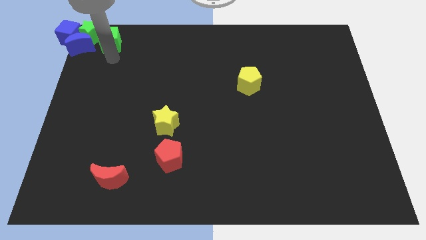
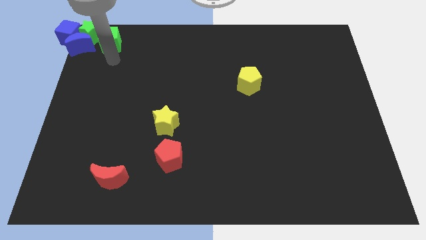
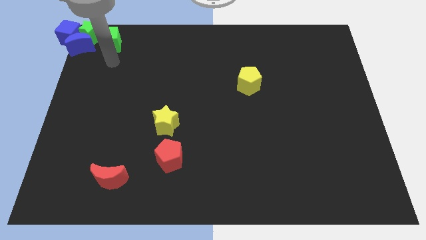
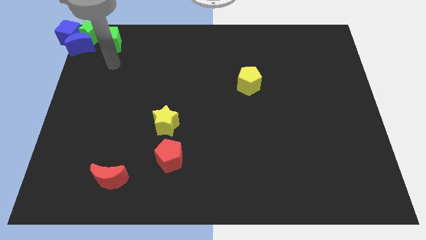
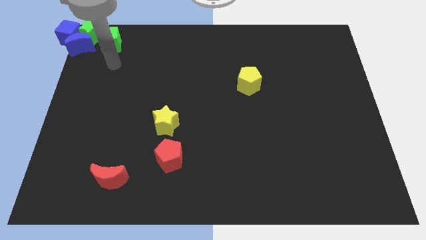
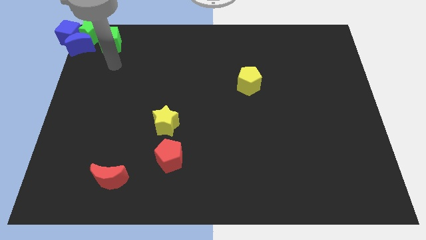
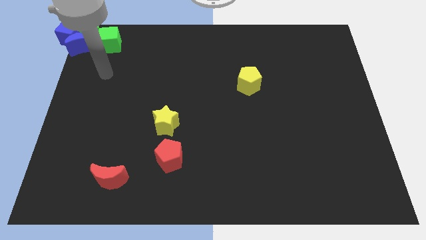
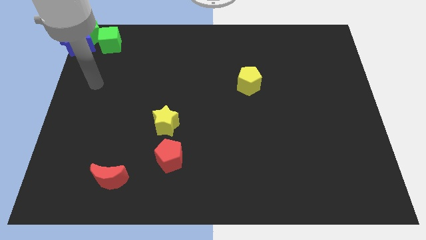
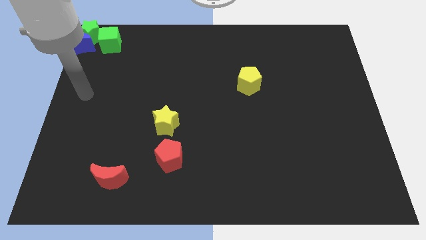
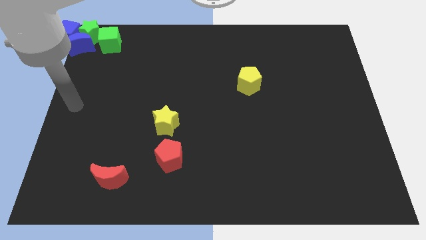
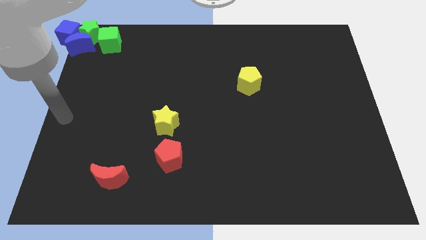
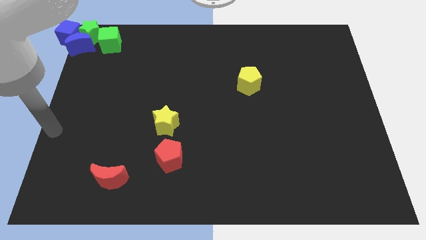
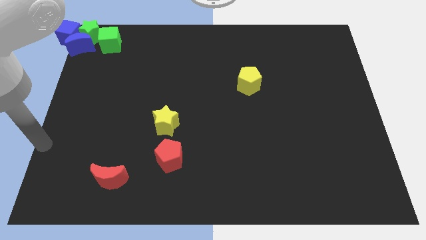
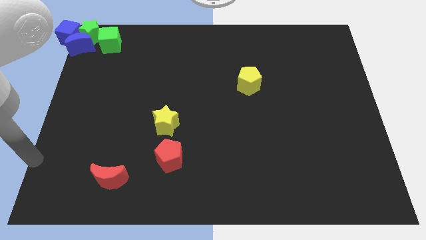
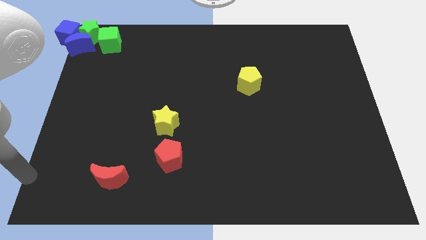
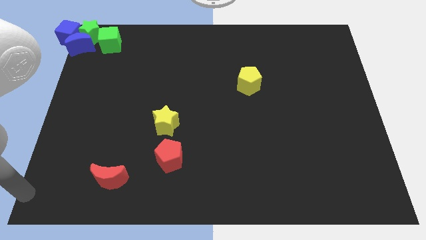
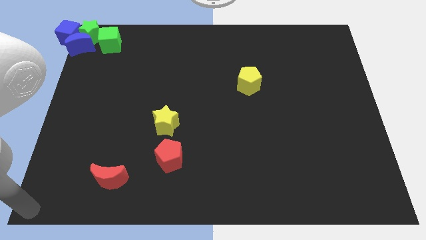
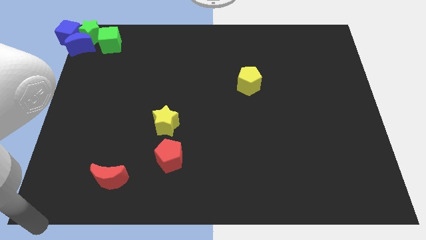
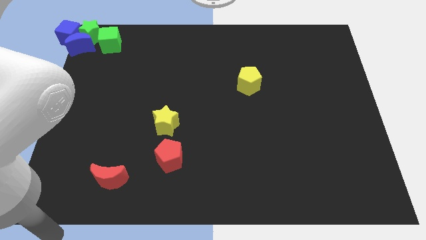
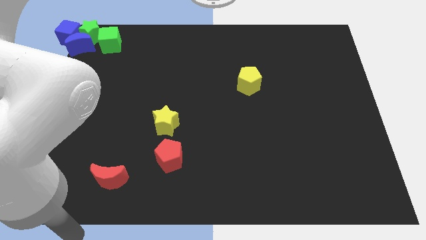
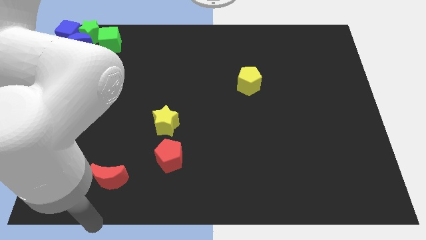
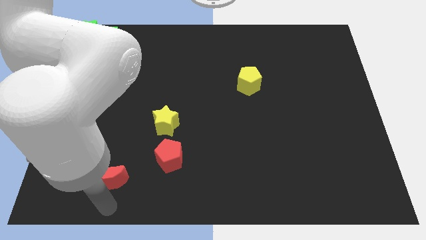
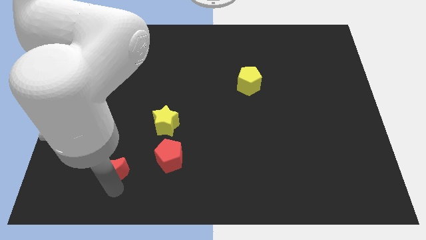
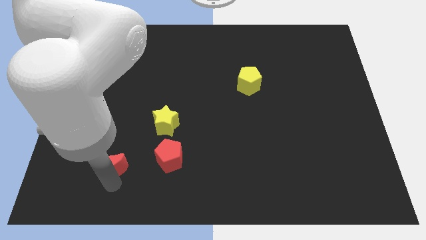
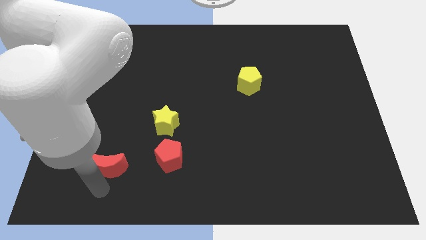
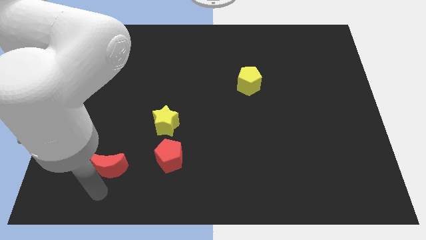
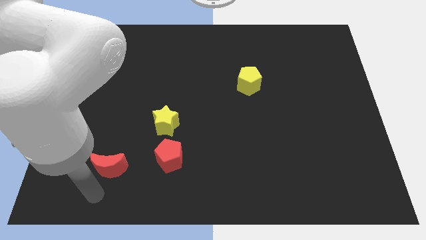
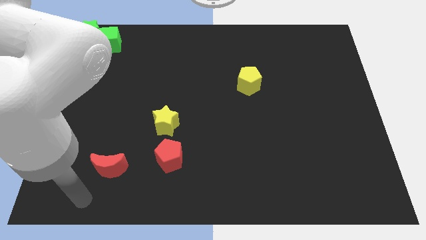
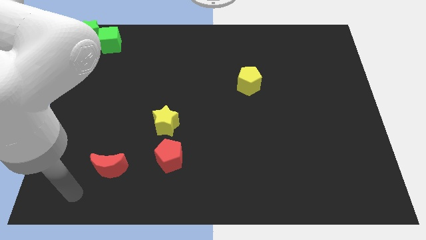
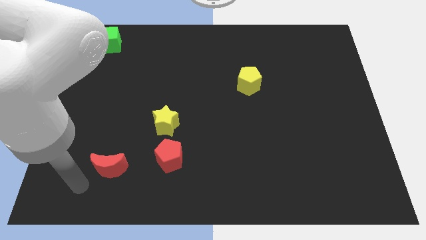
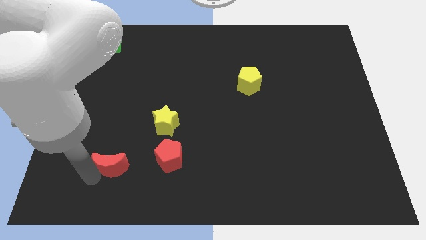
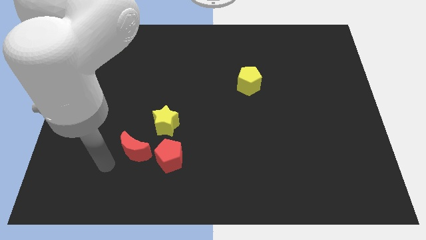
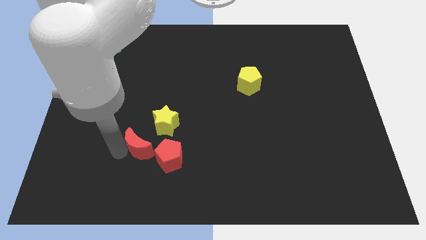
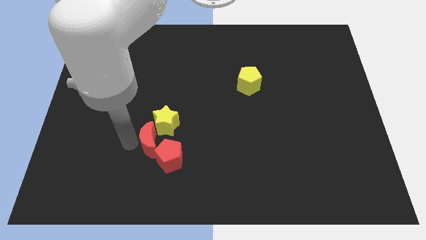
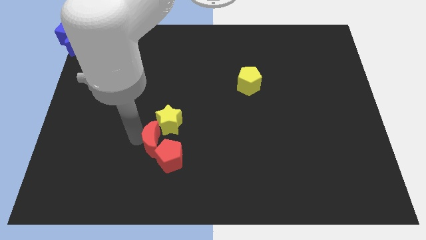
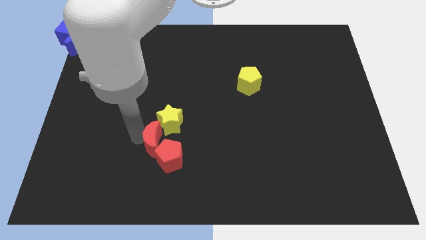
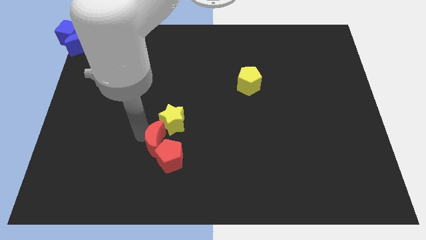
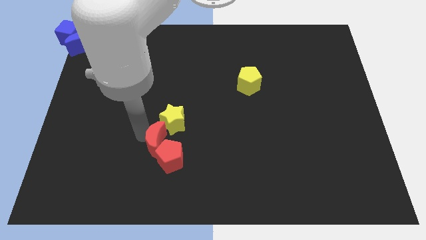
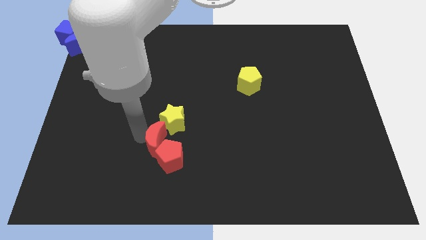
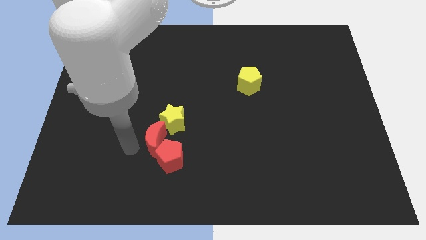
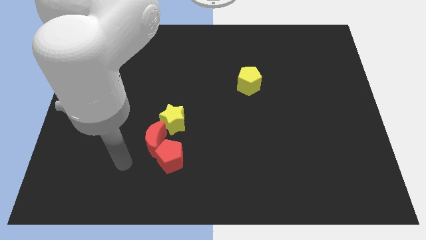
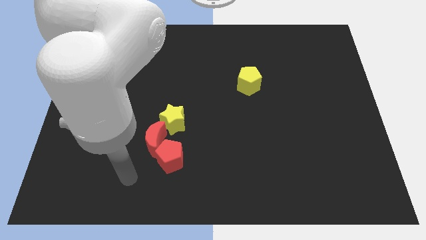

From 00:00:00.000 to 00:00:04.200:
place the red crescent in between the yellow star and red pentagon

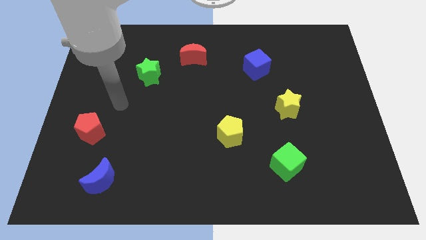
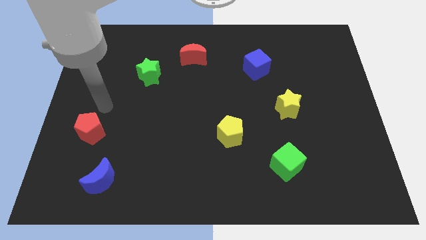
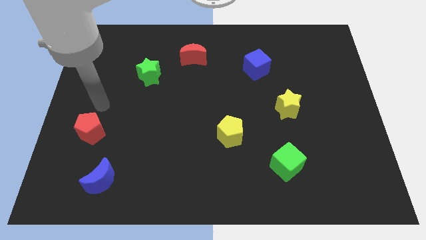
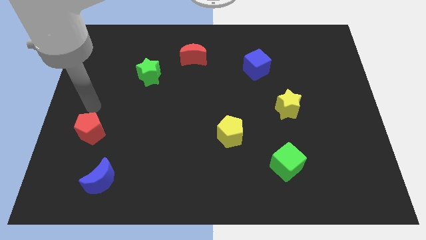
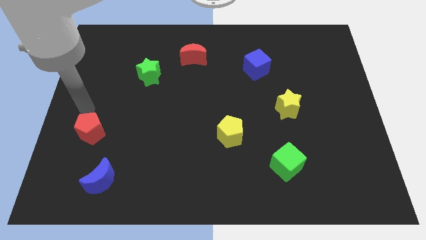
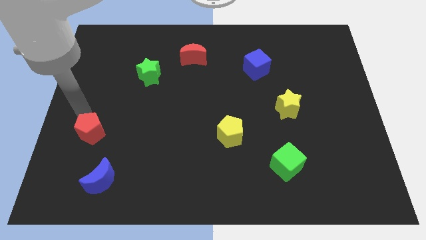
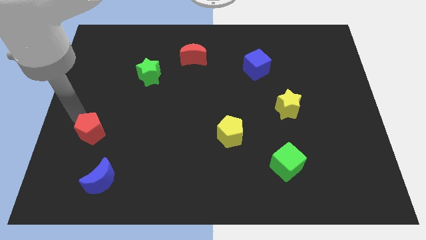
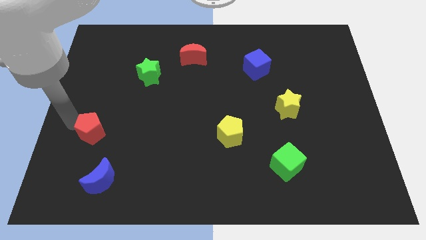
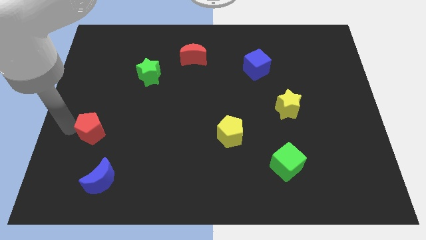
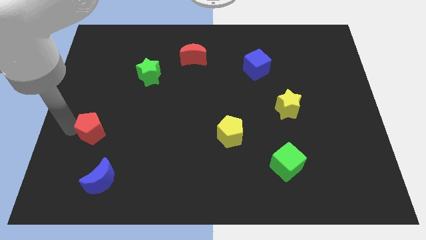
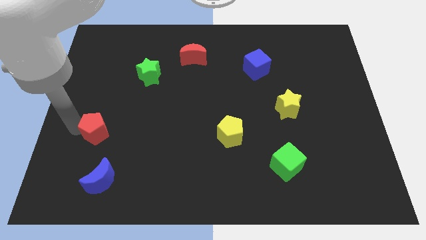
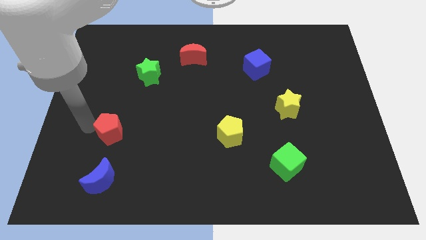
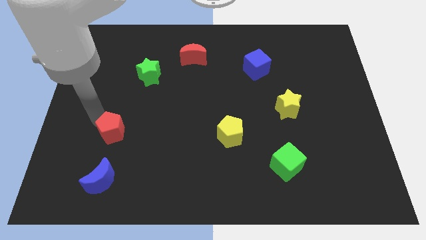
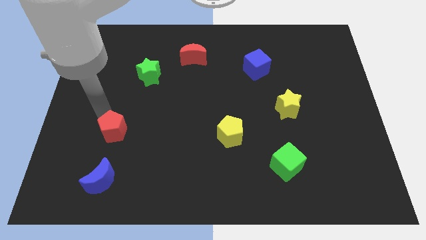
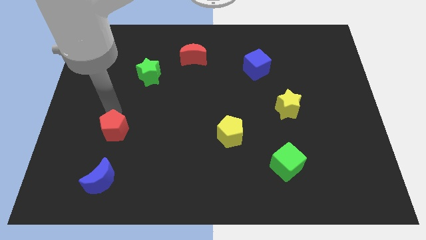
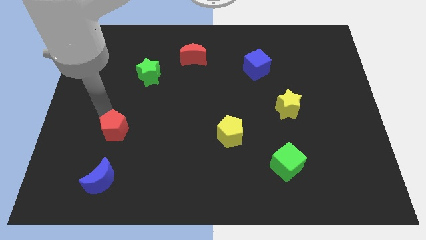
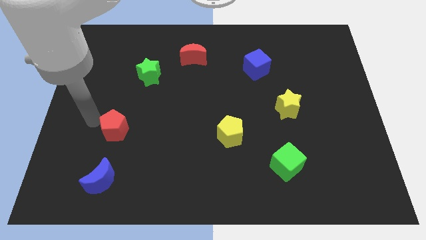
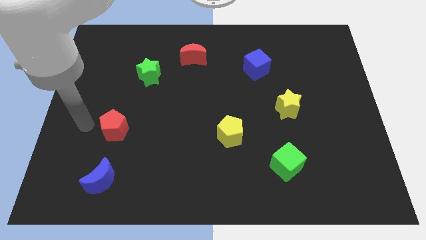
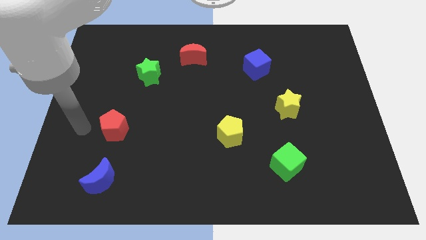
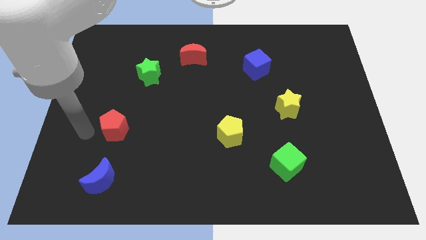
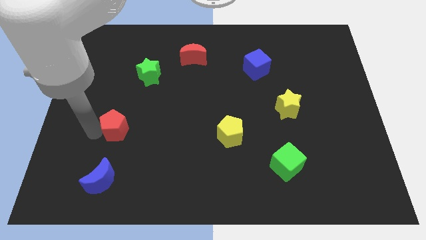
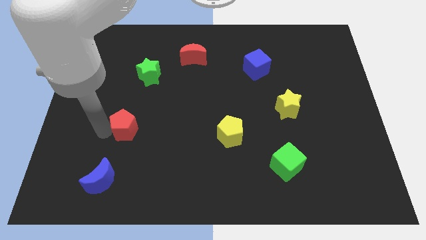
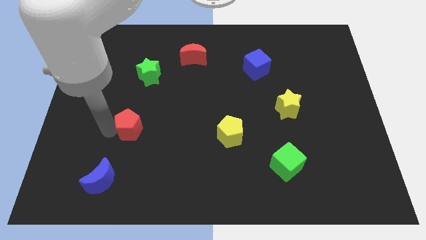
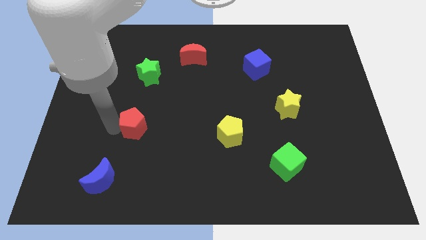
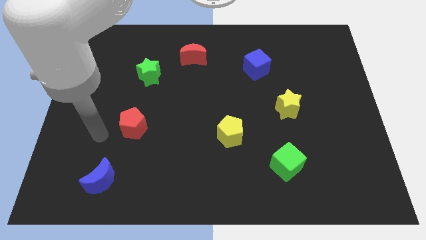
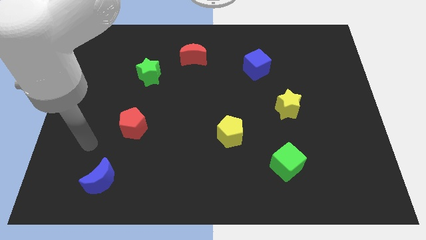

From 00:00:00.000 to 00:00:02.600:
slide the red pentagon vertically below the green star

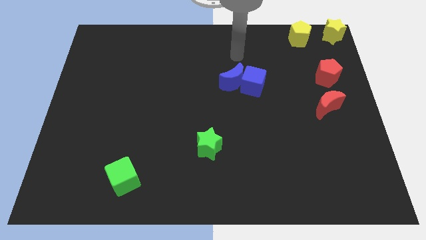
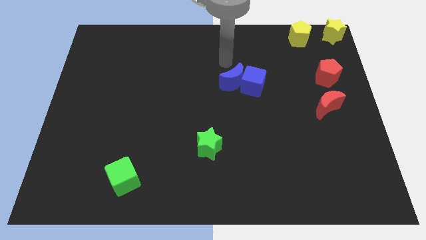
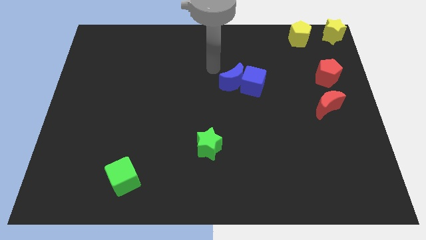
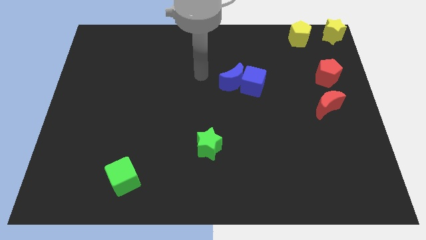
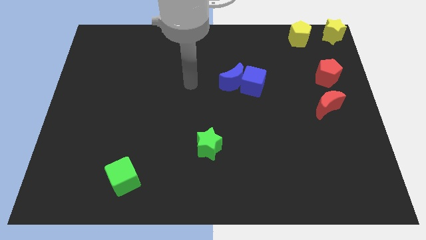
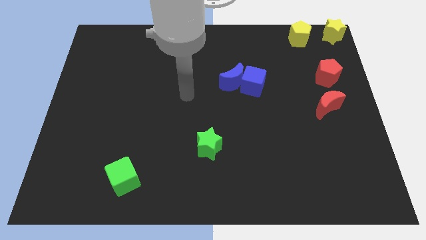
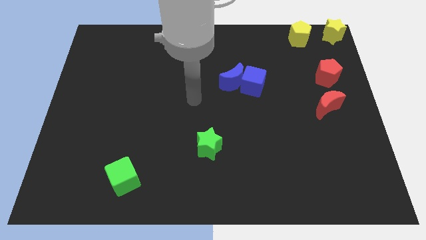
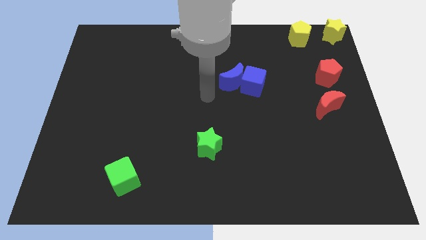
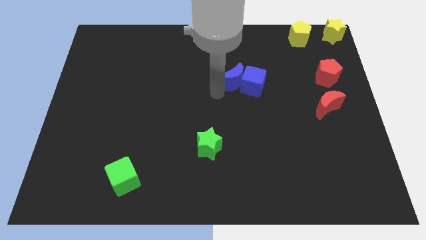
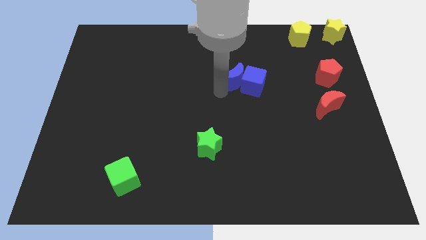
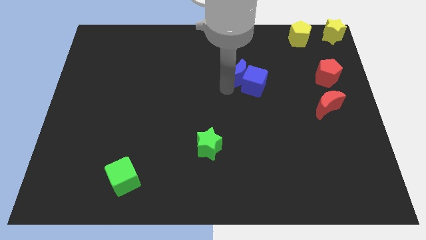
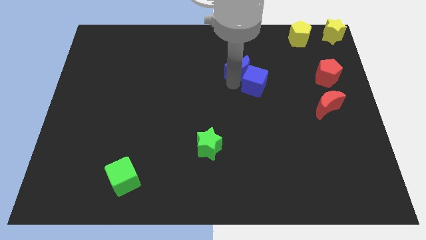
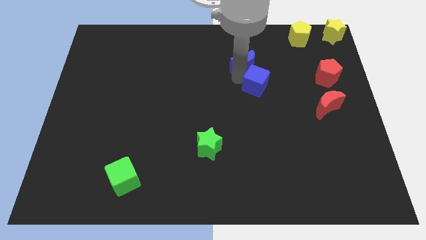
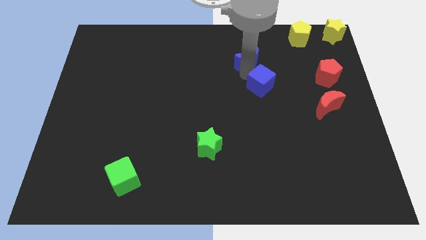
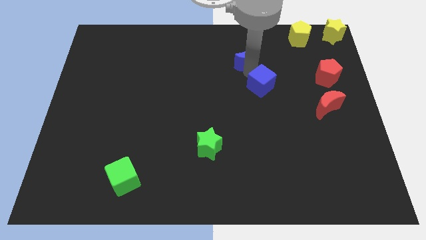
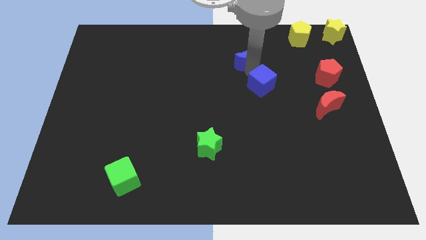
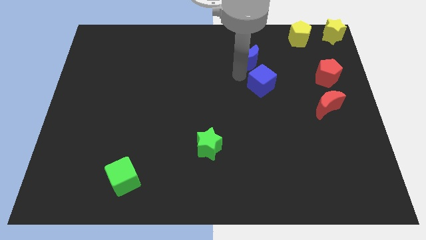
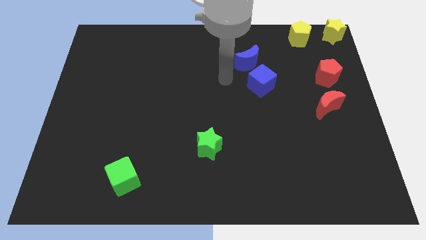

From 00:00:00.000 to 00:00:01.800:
separate the group of blue blocks

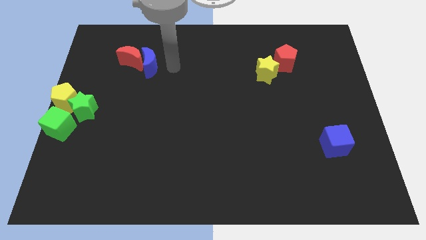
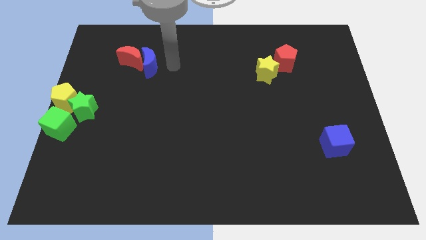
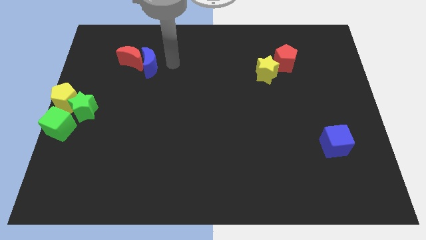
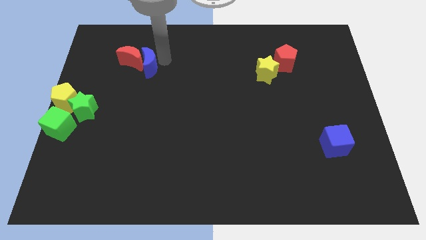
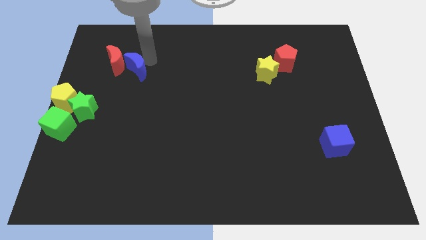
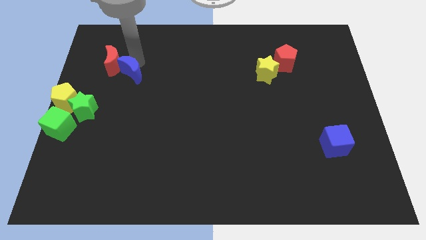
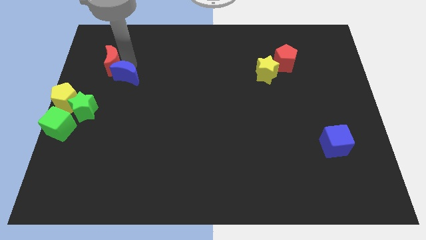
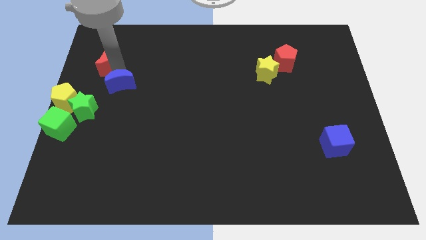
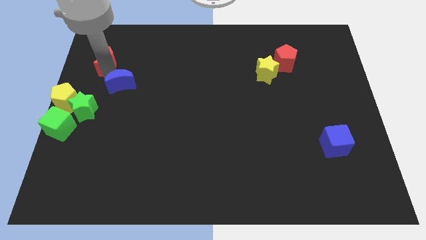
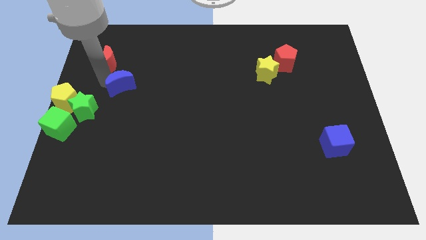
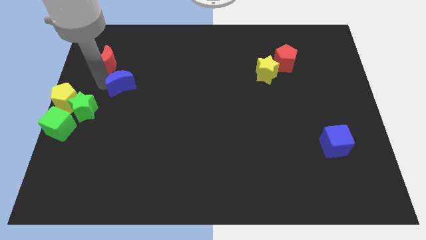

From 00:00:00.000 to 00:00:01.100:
separate the red moon from the blue moon
